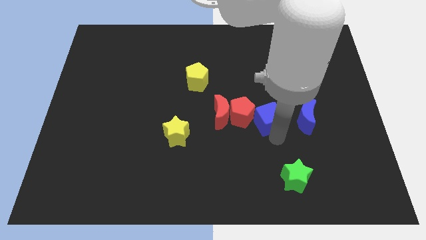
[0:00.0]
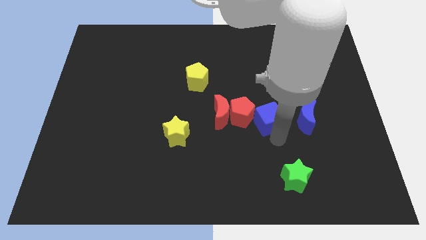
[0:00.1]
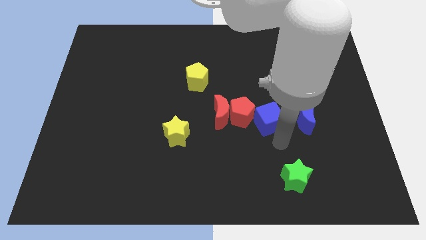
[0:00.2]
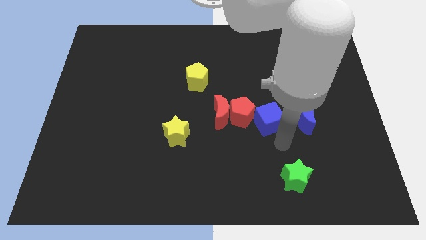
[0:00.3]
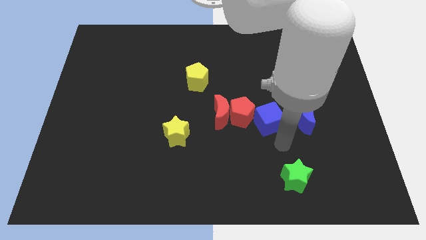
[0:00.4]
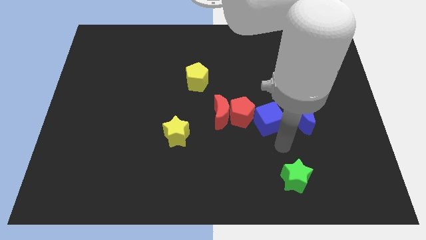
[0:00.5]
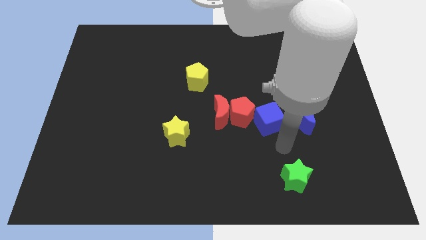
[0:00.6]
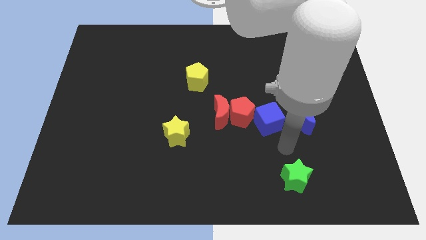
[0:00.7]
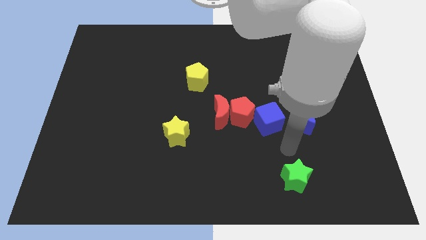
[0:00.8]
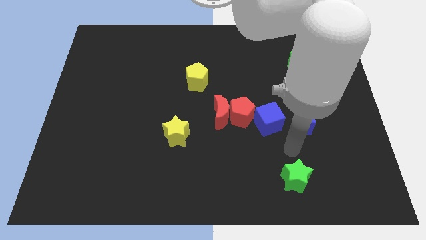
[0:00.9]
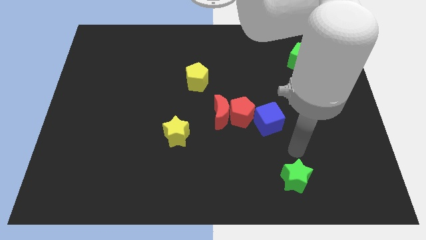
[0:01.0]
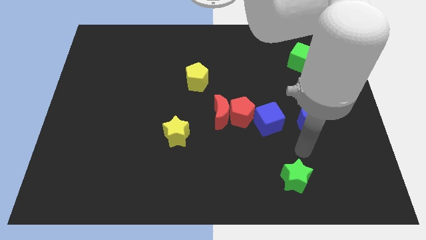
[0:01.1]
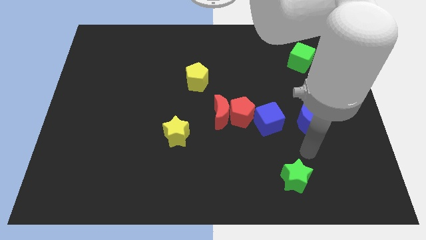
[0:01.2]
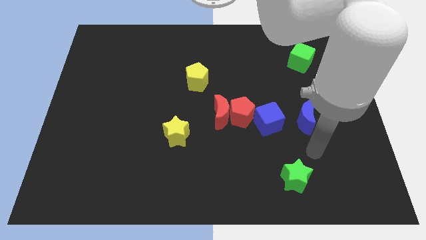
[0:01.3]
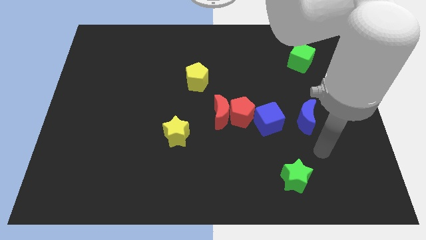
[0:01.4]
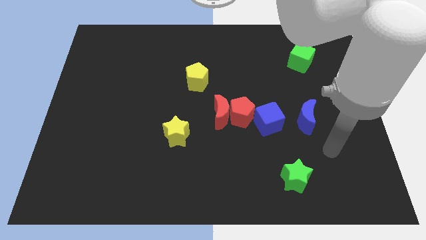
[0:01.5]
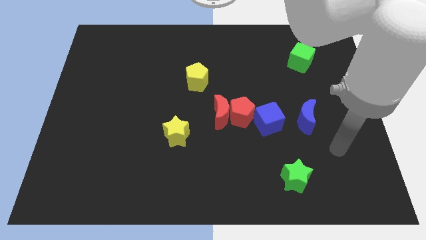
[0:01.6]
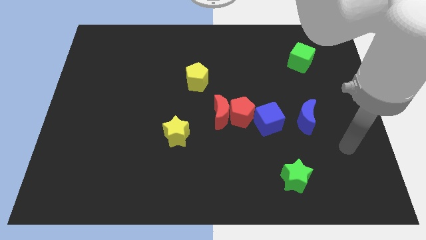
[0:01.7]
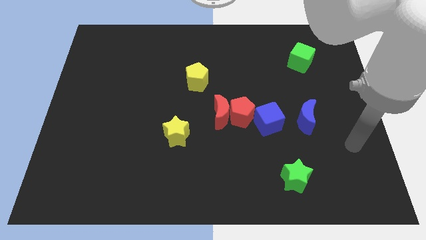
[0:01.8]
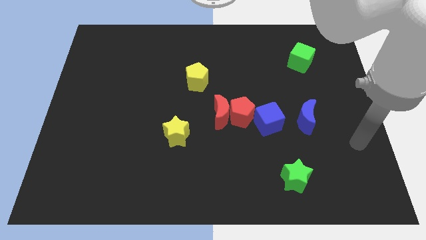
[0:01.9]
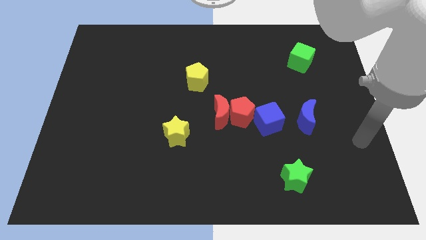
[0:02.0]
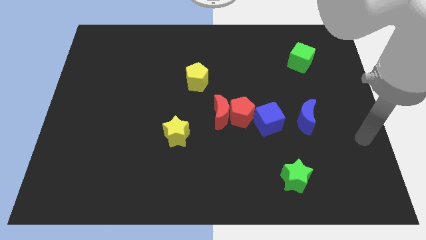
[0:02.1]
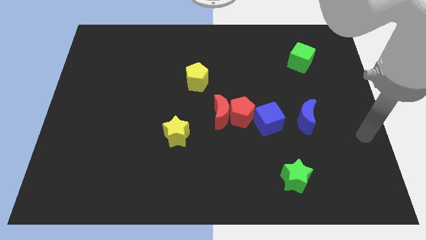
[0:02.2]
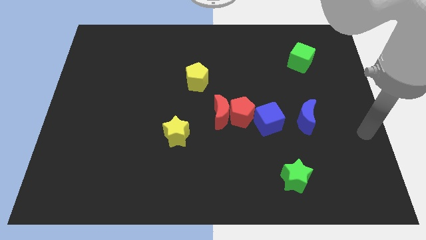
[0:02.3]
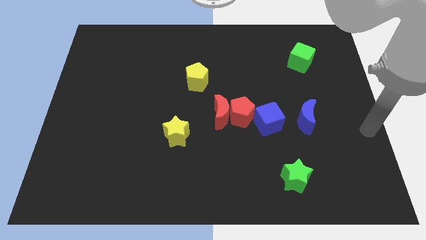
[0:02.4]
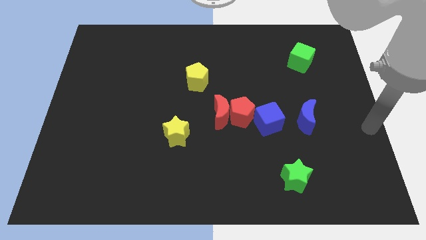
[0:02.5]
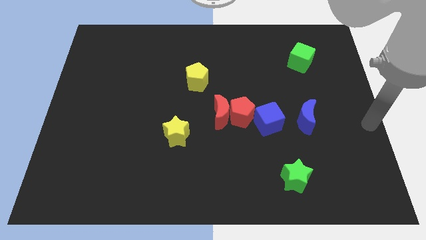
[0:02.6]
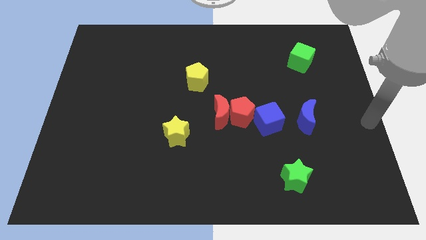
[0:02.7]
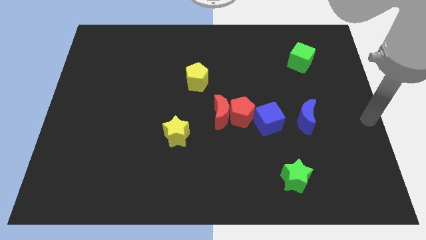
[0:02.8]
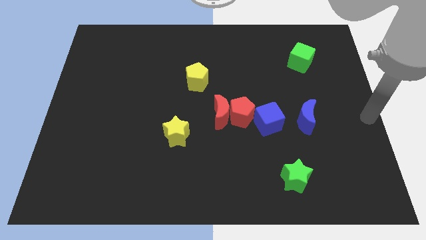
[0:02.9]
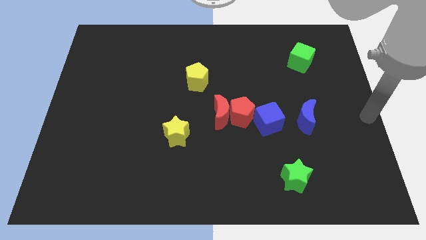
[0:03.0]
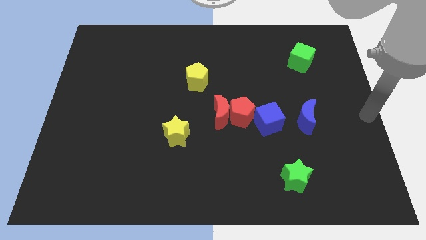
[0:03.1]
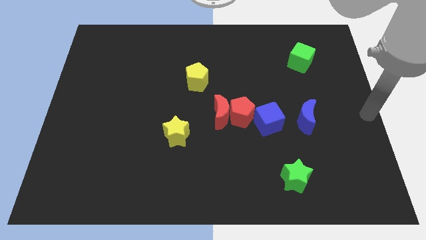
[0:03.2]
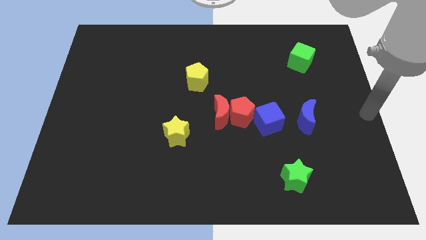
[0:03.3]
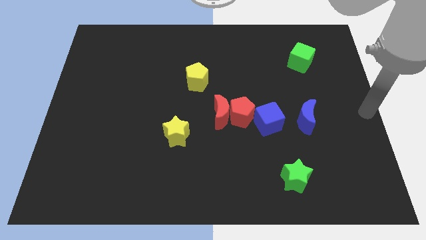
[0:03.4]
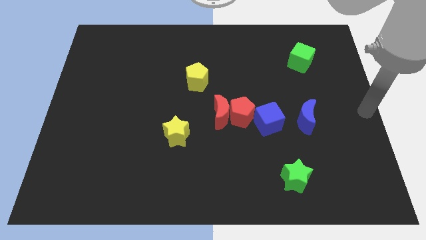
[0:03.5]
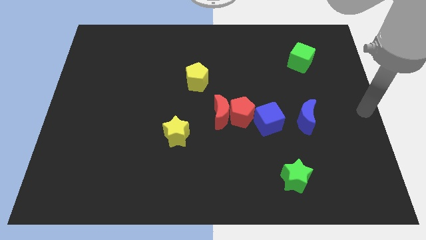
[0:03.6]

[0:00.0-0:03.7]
move the arm towards the right centre of the board

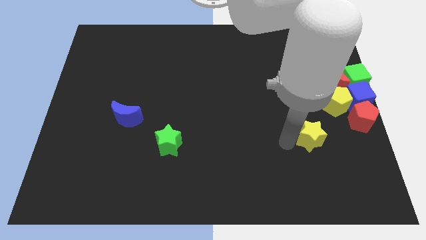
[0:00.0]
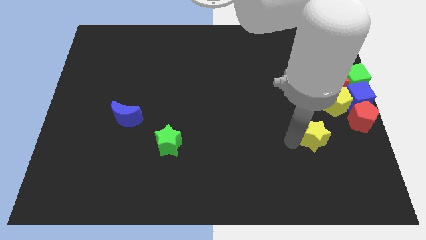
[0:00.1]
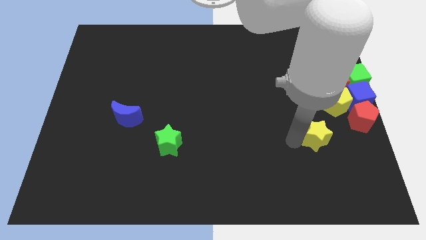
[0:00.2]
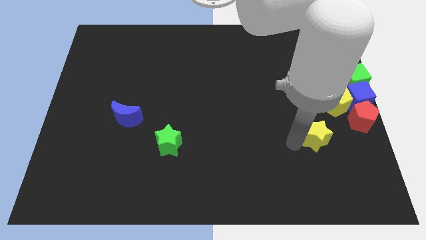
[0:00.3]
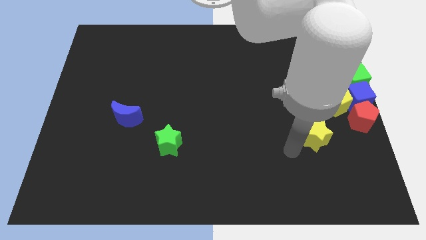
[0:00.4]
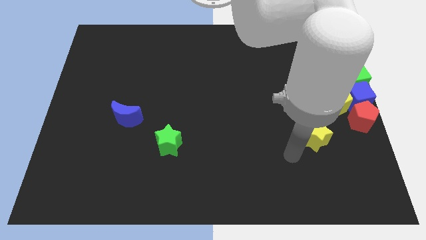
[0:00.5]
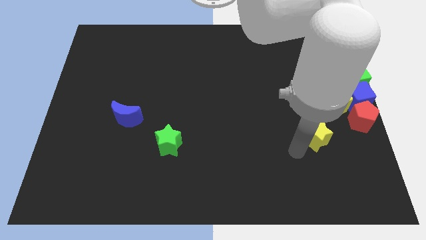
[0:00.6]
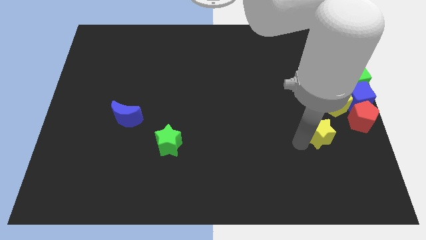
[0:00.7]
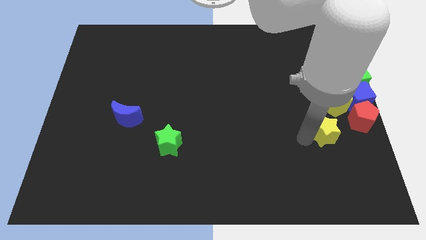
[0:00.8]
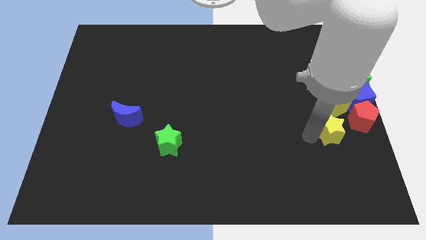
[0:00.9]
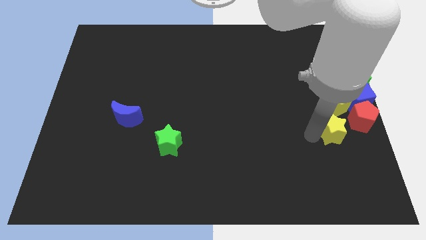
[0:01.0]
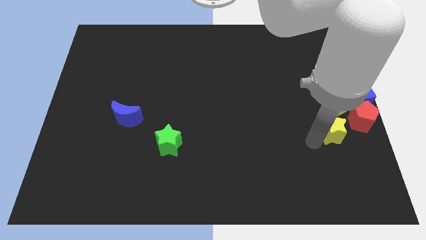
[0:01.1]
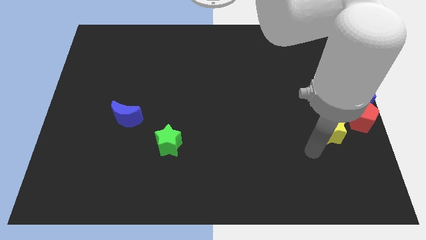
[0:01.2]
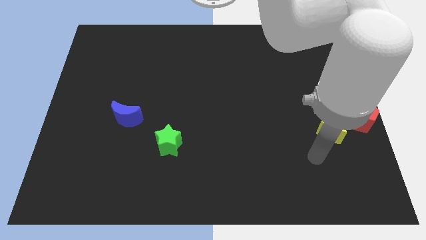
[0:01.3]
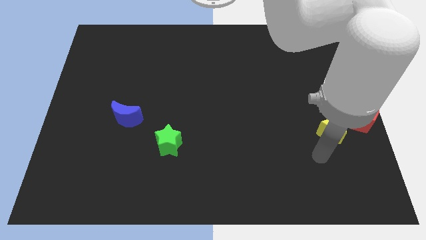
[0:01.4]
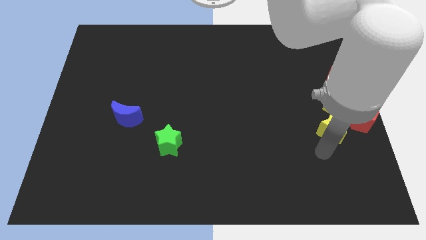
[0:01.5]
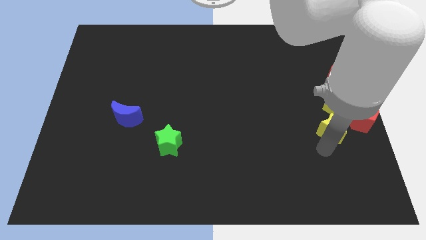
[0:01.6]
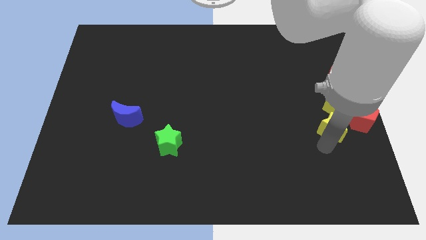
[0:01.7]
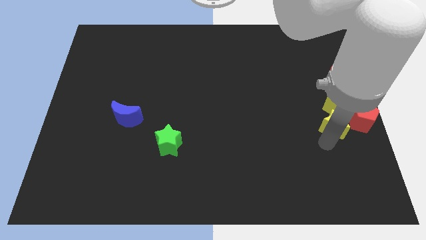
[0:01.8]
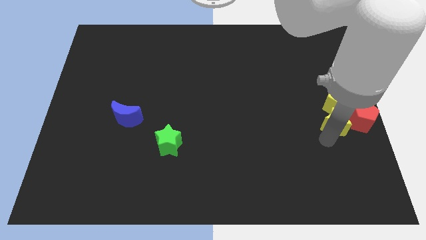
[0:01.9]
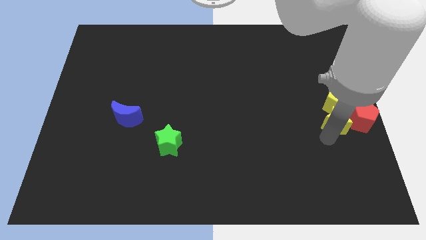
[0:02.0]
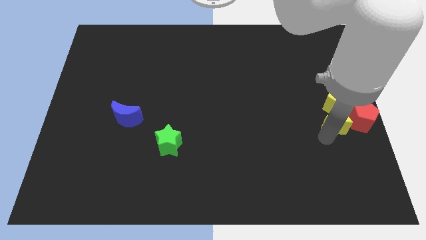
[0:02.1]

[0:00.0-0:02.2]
push the yellow star to the bottom side of the yellow pentagon

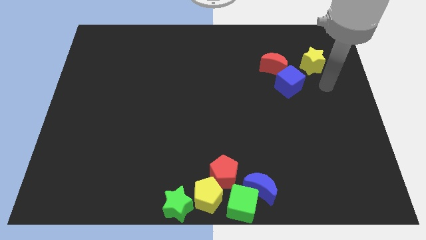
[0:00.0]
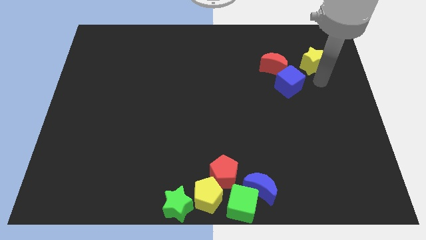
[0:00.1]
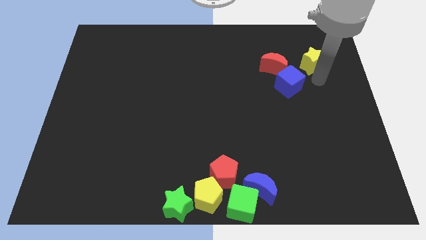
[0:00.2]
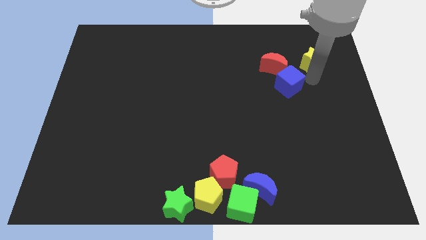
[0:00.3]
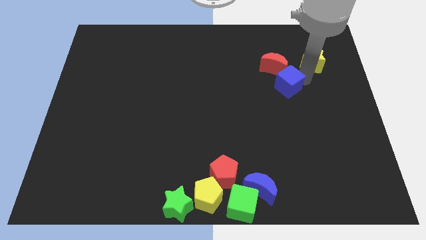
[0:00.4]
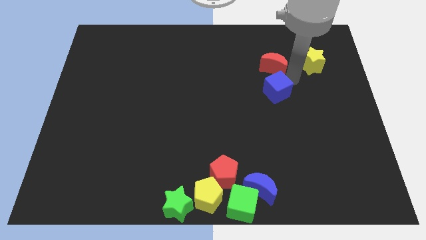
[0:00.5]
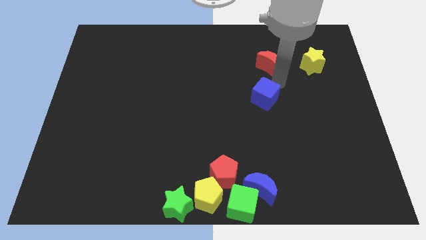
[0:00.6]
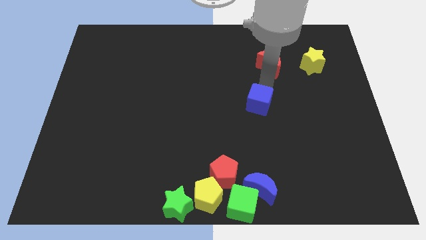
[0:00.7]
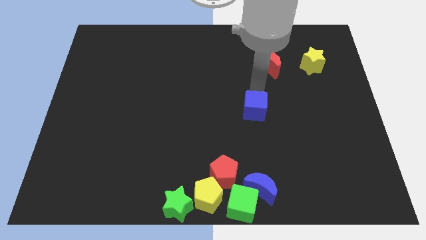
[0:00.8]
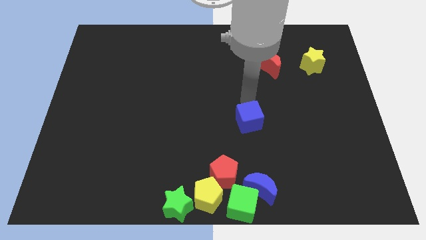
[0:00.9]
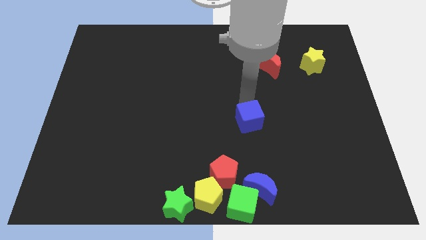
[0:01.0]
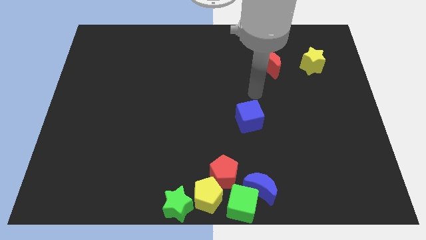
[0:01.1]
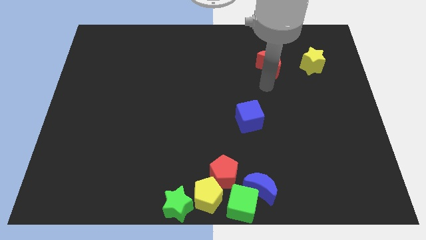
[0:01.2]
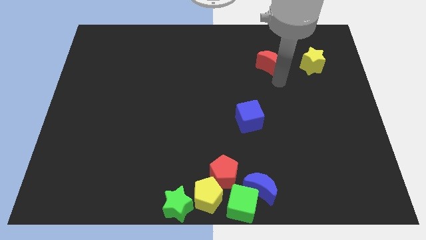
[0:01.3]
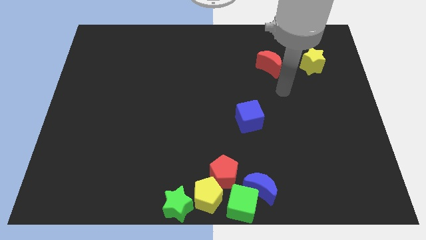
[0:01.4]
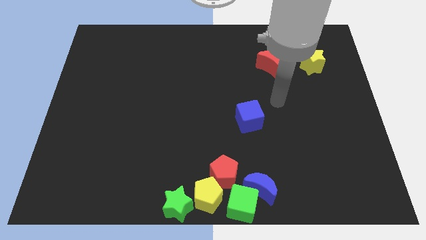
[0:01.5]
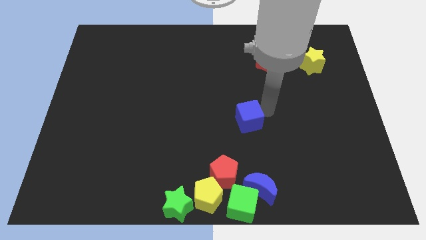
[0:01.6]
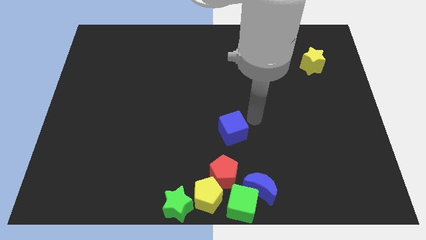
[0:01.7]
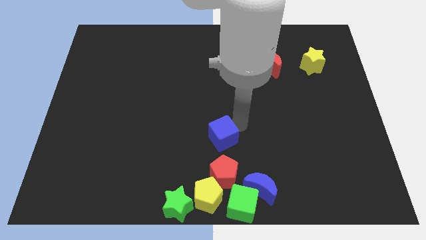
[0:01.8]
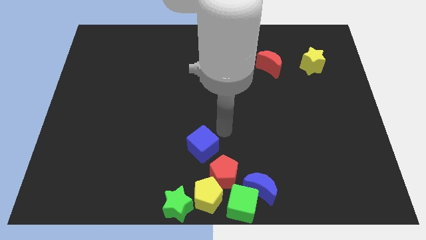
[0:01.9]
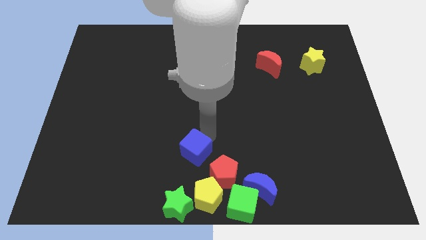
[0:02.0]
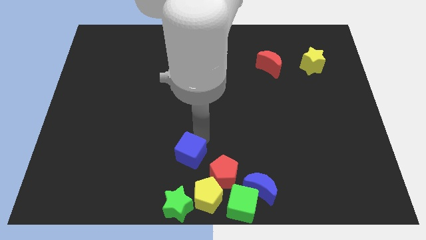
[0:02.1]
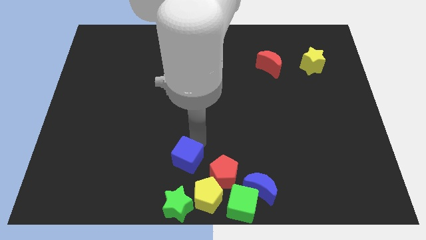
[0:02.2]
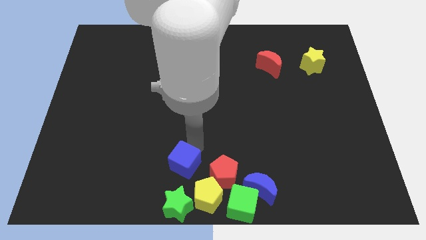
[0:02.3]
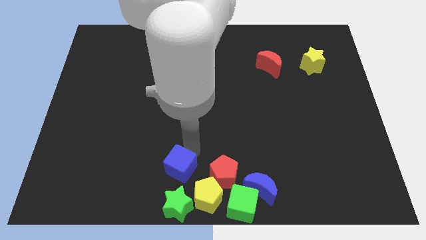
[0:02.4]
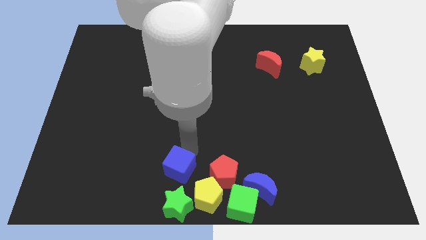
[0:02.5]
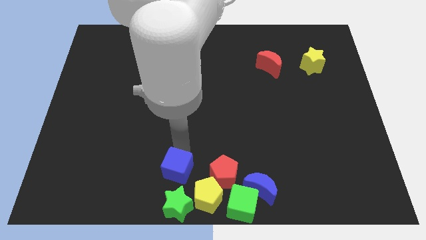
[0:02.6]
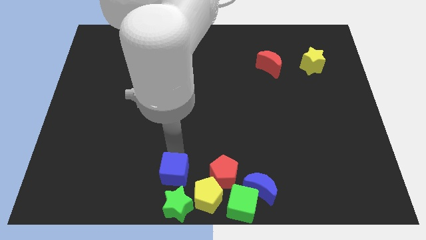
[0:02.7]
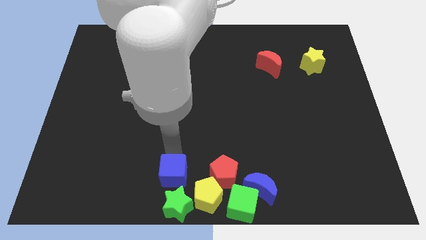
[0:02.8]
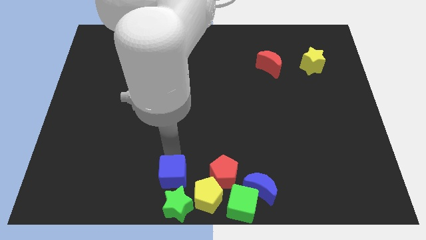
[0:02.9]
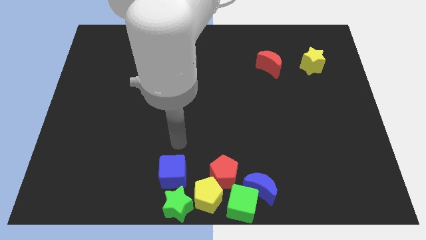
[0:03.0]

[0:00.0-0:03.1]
place the blue cube on the top of green star
